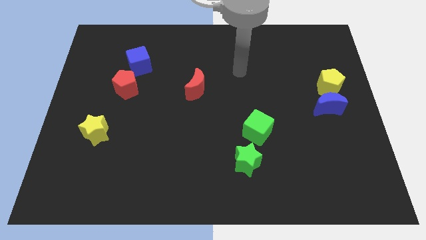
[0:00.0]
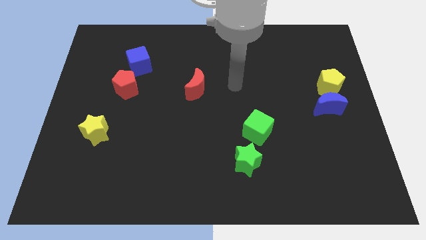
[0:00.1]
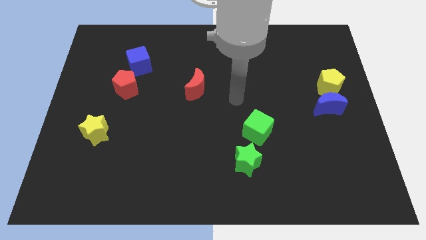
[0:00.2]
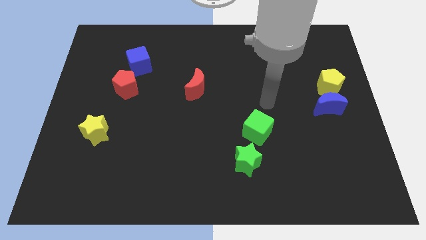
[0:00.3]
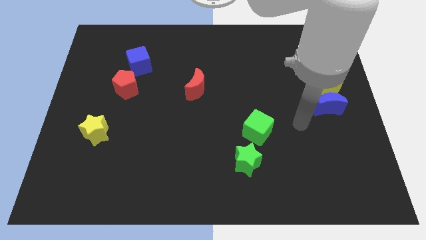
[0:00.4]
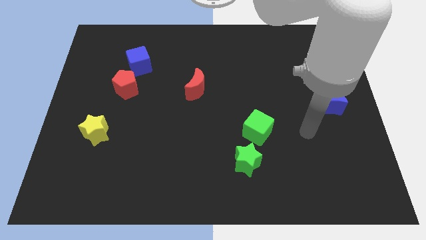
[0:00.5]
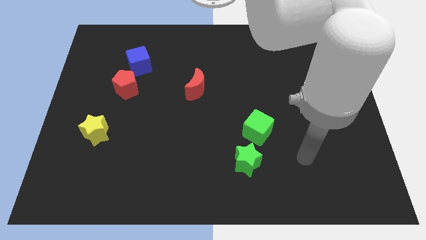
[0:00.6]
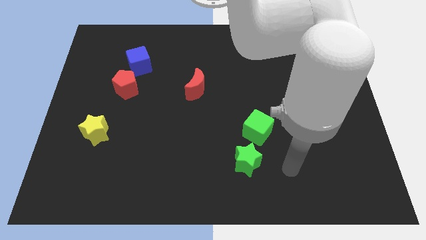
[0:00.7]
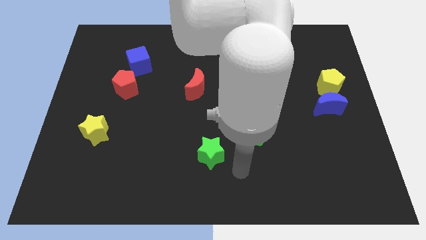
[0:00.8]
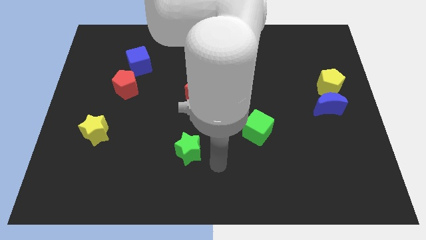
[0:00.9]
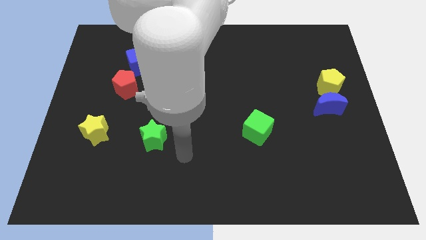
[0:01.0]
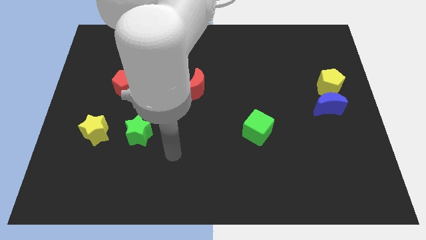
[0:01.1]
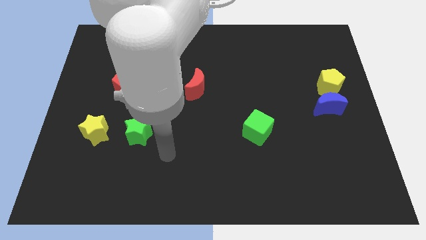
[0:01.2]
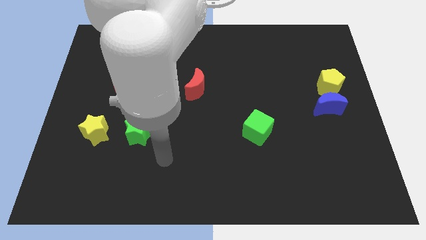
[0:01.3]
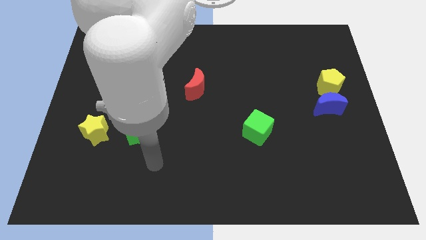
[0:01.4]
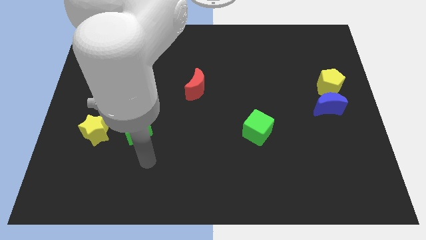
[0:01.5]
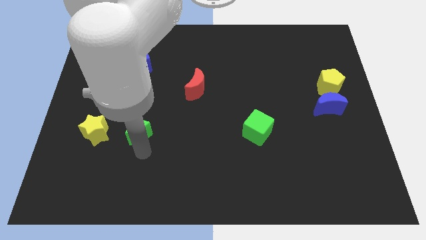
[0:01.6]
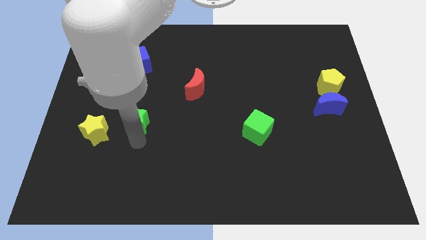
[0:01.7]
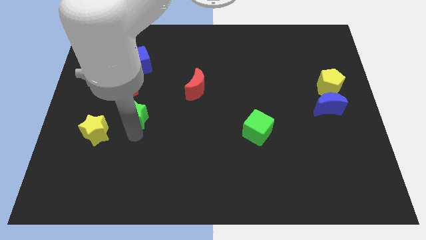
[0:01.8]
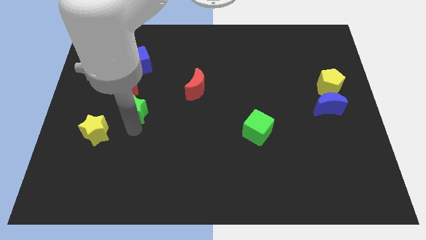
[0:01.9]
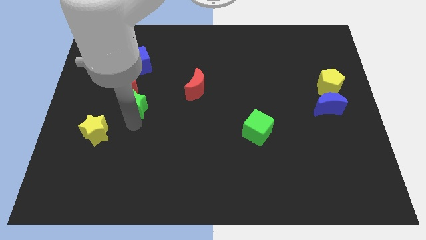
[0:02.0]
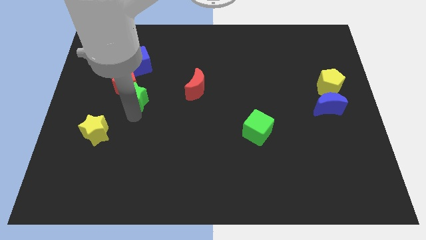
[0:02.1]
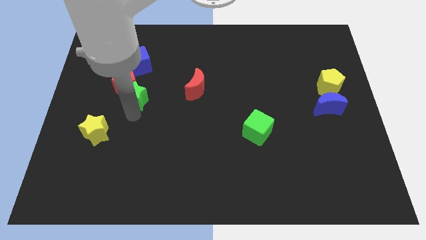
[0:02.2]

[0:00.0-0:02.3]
slide the green star close to the red pentagon

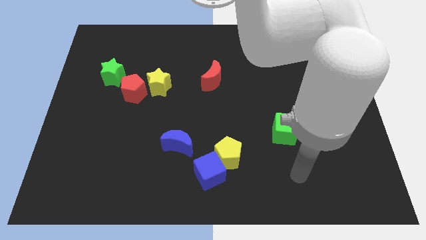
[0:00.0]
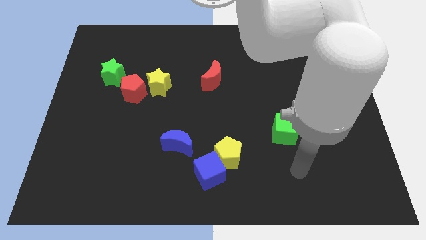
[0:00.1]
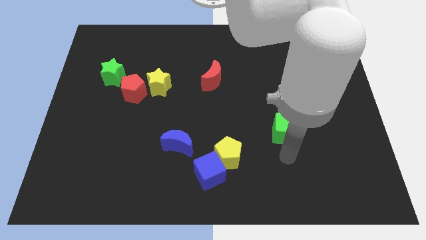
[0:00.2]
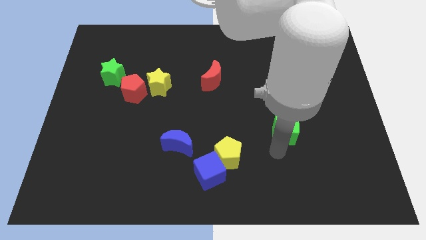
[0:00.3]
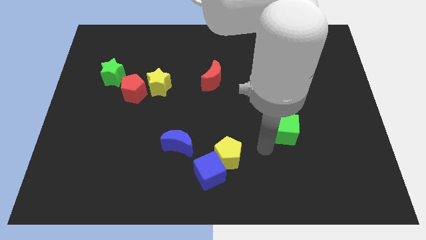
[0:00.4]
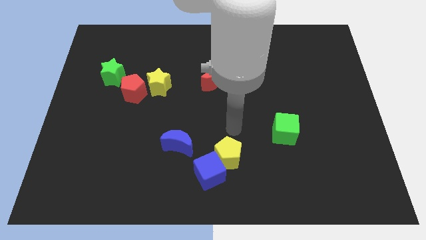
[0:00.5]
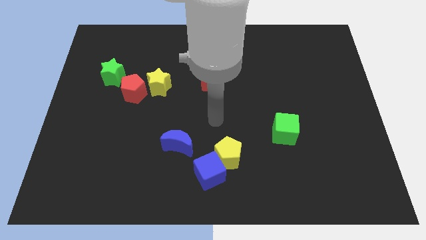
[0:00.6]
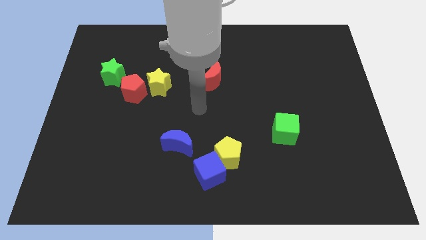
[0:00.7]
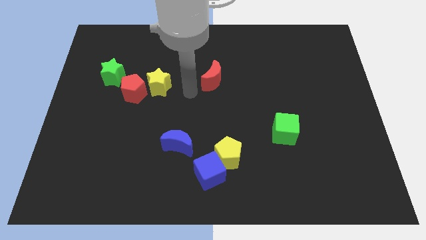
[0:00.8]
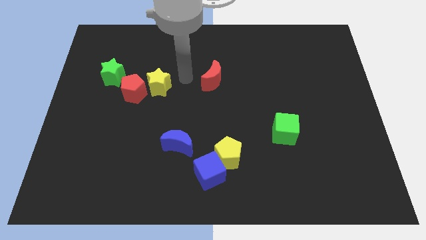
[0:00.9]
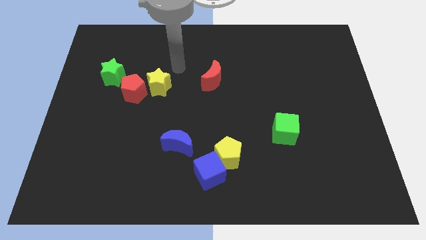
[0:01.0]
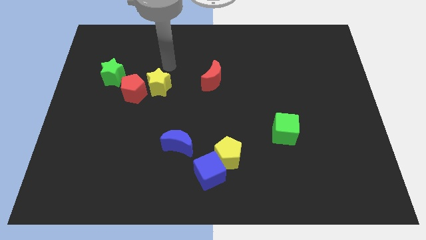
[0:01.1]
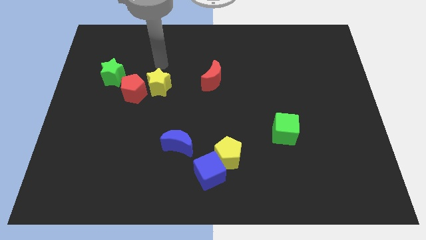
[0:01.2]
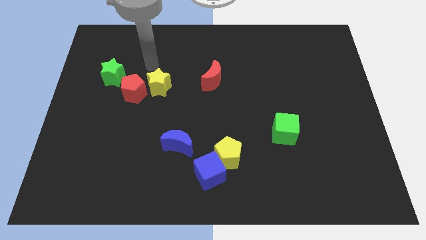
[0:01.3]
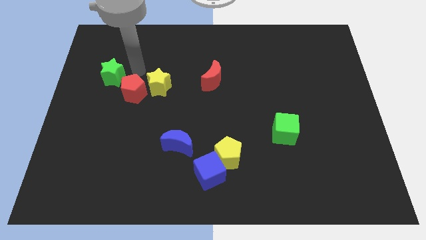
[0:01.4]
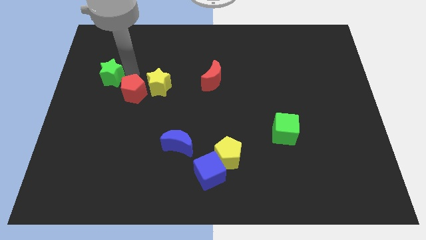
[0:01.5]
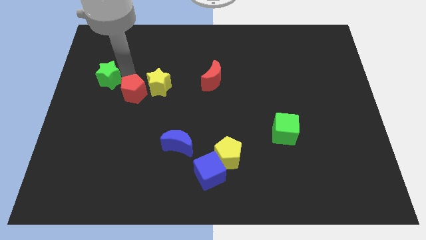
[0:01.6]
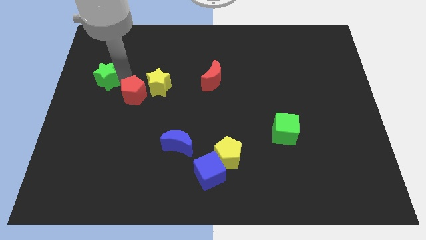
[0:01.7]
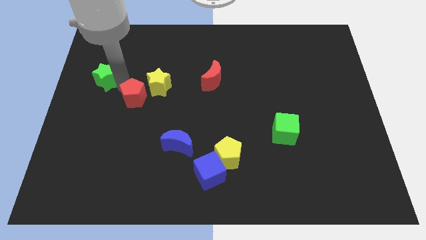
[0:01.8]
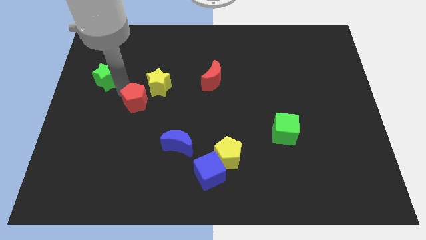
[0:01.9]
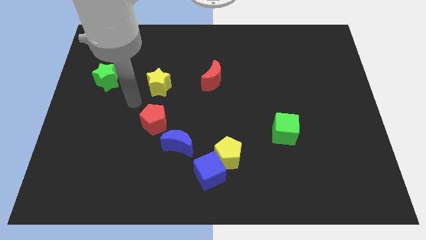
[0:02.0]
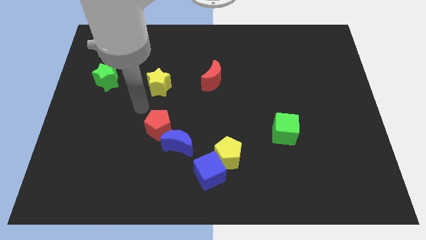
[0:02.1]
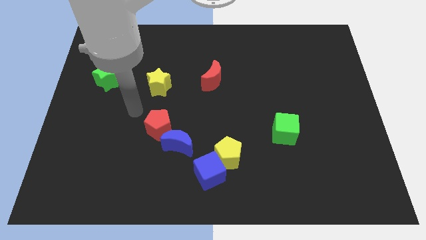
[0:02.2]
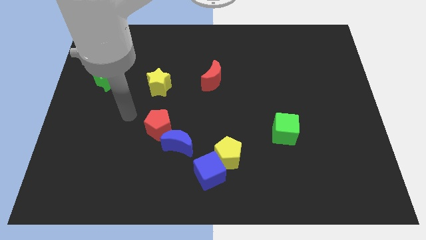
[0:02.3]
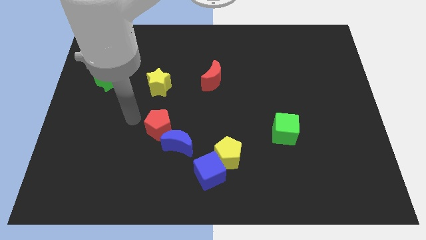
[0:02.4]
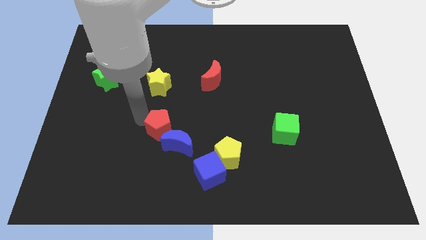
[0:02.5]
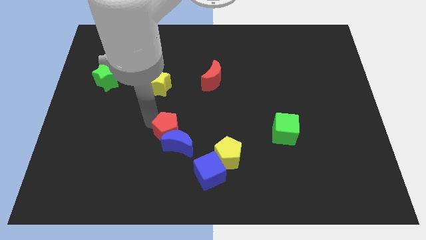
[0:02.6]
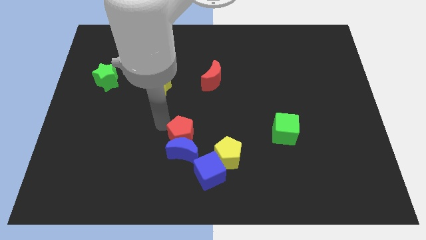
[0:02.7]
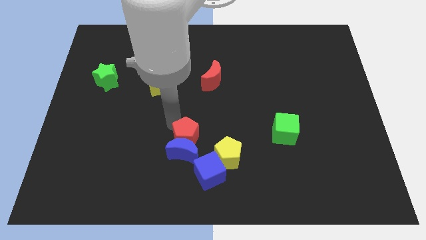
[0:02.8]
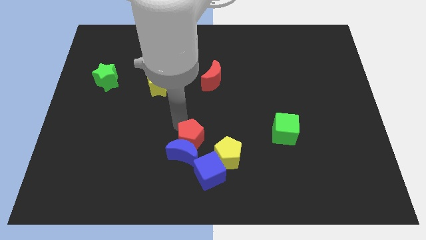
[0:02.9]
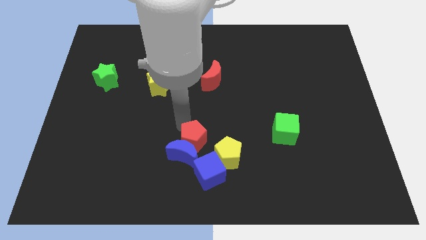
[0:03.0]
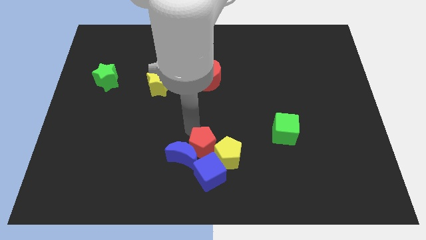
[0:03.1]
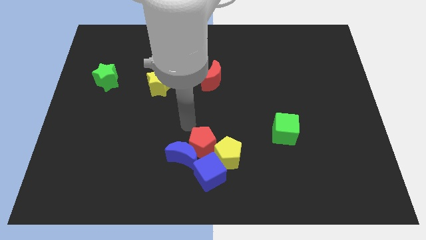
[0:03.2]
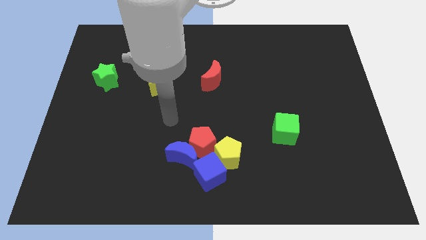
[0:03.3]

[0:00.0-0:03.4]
put the red pentagon close to the yellow pentagon

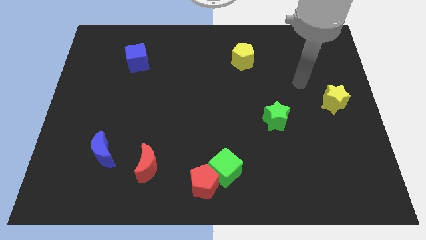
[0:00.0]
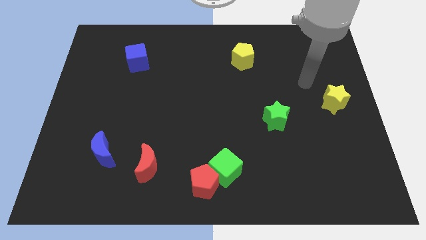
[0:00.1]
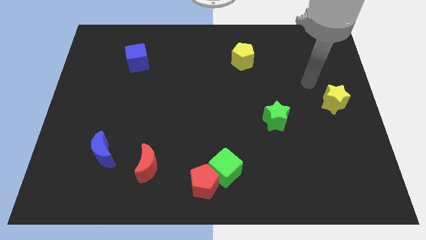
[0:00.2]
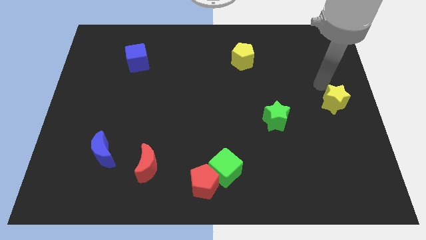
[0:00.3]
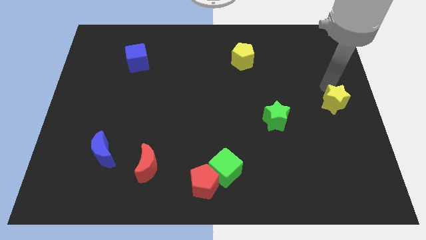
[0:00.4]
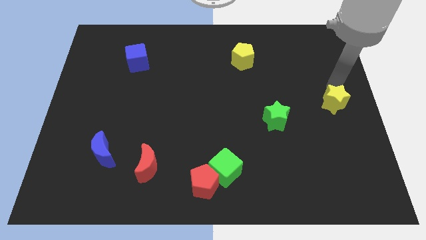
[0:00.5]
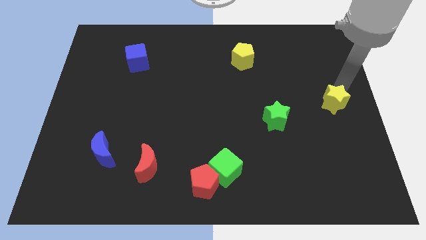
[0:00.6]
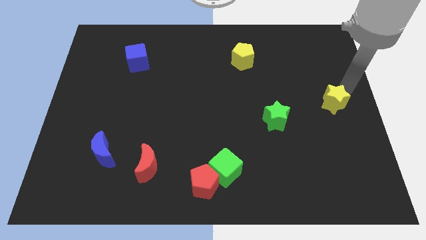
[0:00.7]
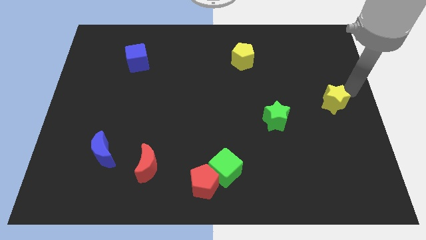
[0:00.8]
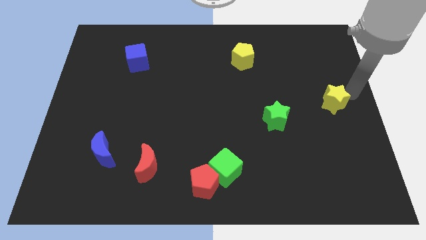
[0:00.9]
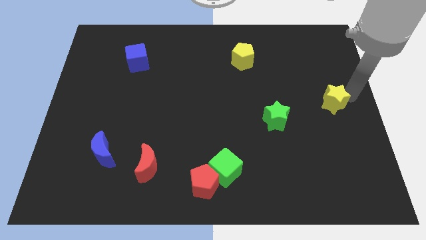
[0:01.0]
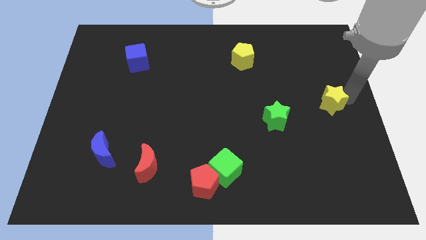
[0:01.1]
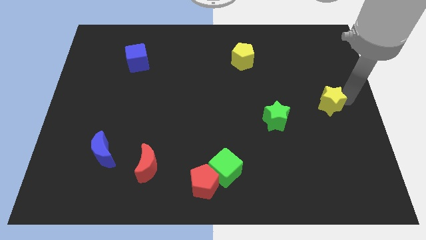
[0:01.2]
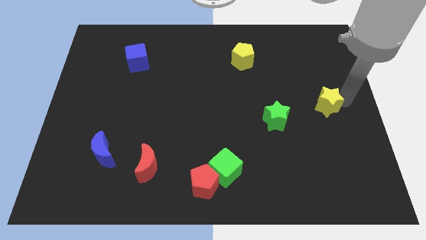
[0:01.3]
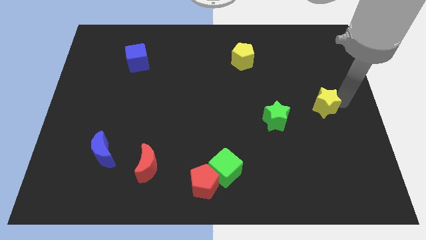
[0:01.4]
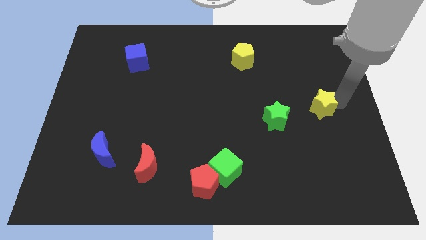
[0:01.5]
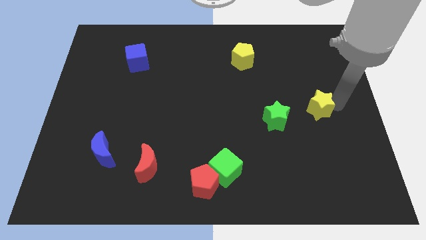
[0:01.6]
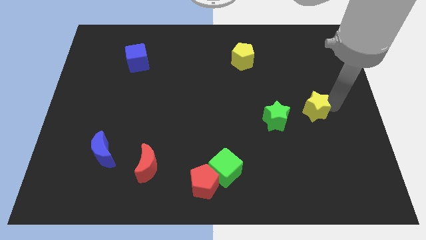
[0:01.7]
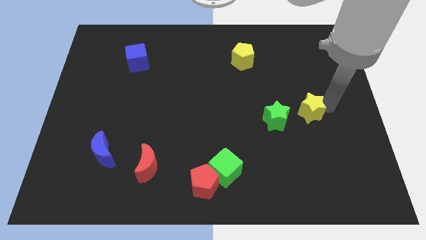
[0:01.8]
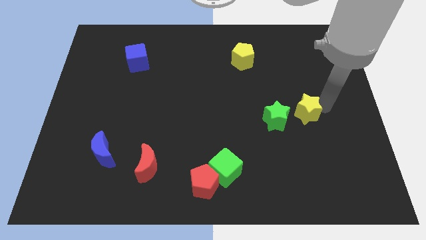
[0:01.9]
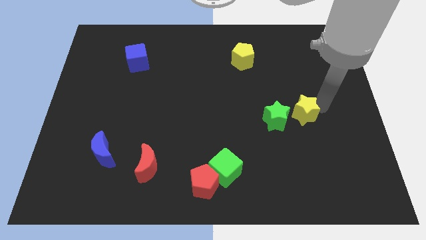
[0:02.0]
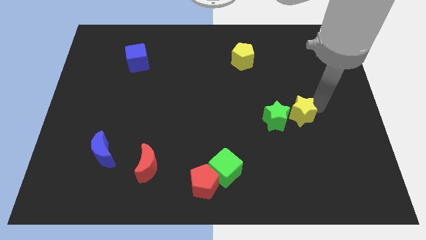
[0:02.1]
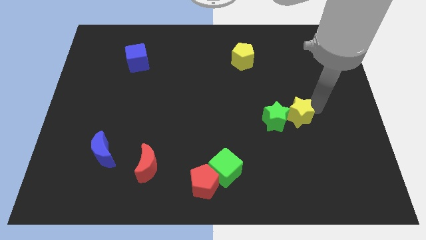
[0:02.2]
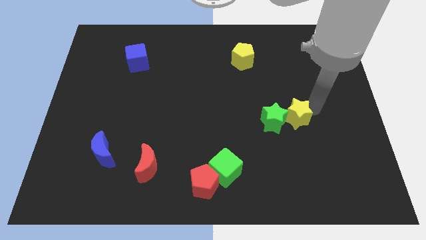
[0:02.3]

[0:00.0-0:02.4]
move the yellow star towards the green star

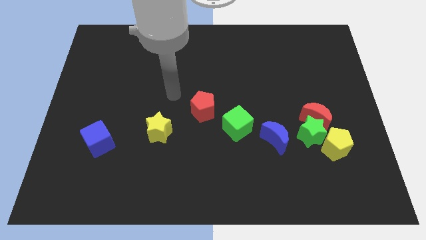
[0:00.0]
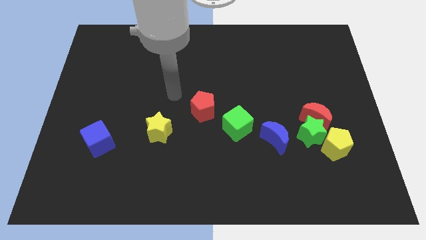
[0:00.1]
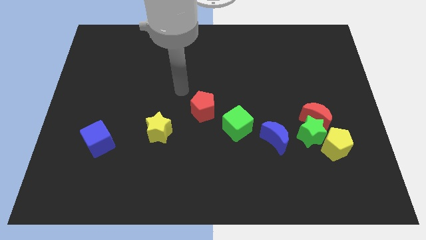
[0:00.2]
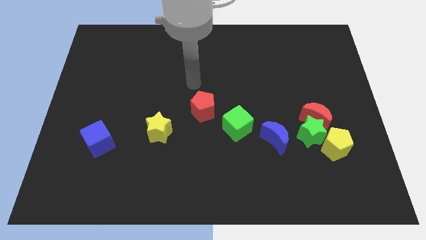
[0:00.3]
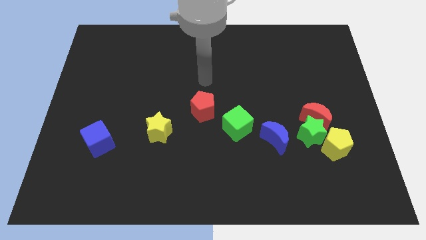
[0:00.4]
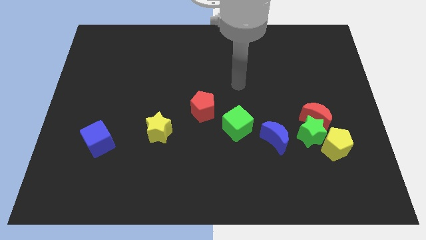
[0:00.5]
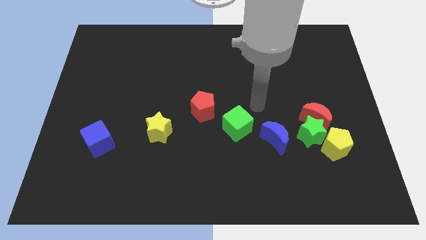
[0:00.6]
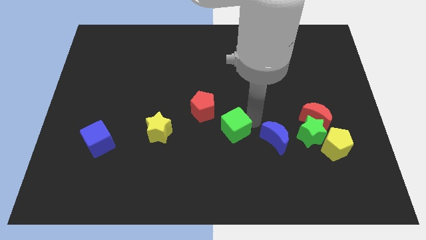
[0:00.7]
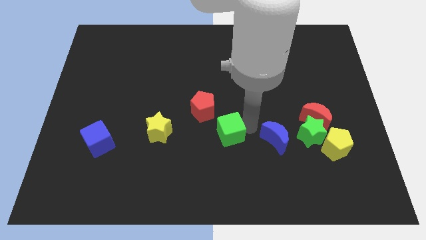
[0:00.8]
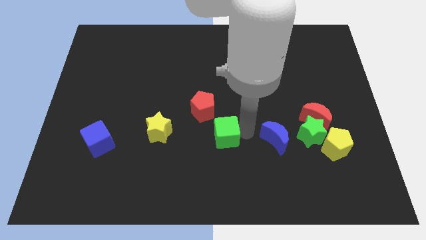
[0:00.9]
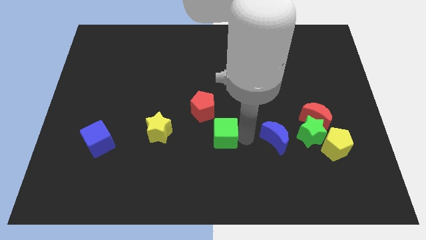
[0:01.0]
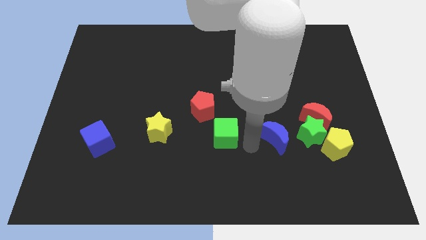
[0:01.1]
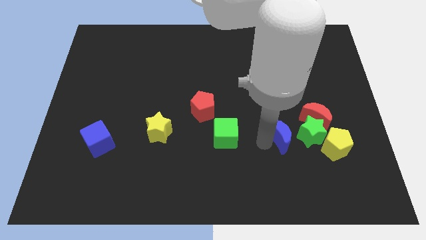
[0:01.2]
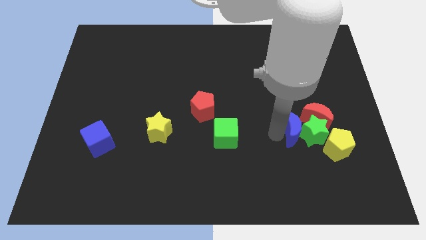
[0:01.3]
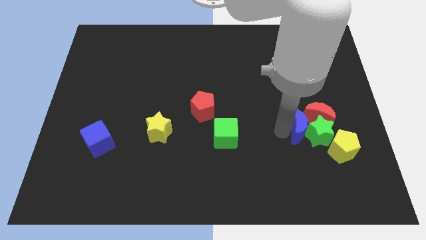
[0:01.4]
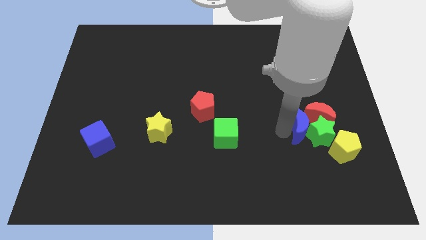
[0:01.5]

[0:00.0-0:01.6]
move the blue moon close to the green star
